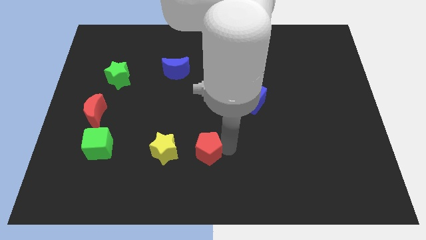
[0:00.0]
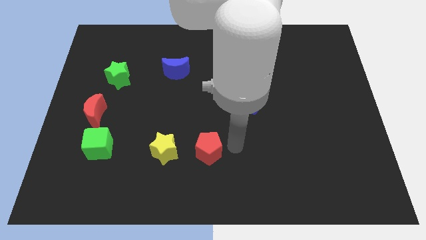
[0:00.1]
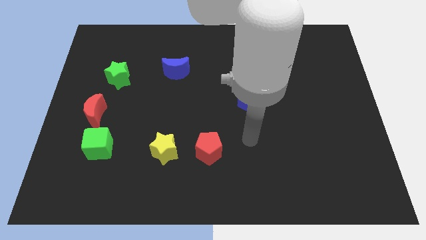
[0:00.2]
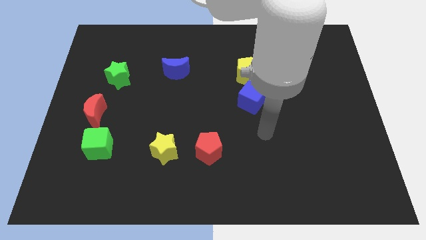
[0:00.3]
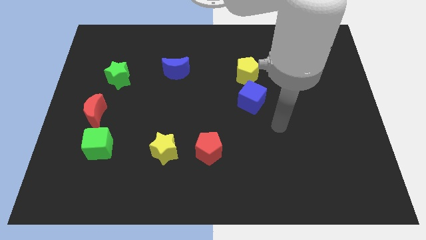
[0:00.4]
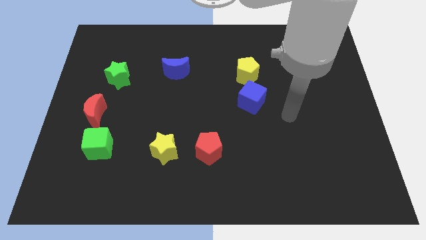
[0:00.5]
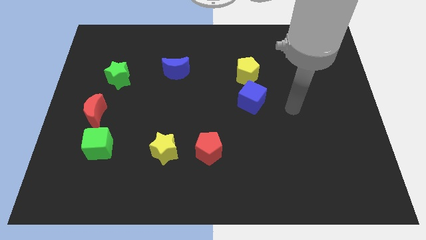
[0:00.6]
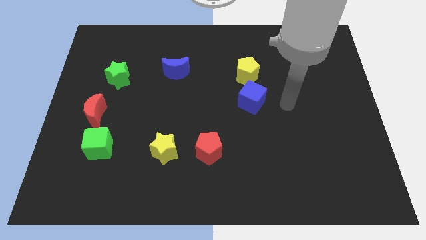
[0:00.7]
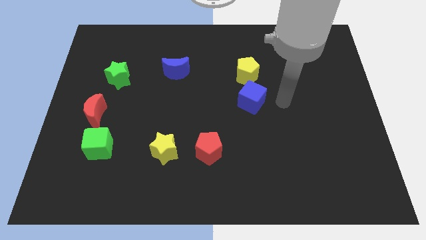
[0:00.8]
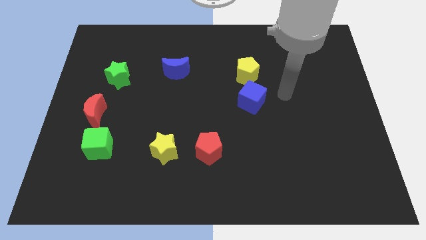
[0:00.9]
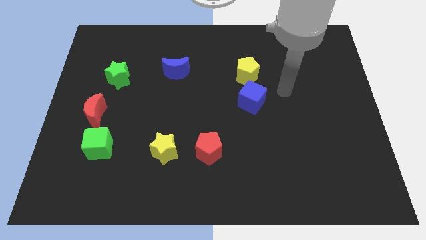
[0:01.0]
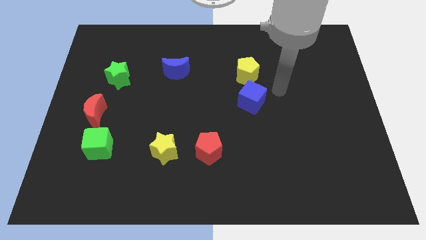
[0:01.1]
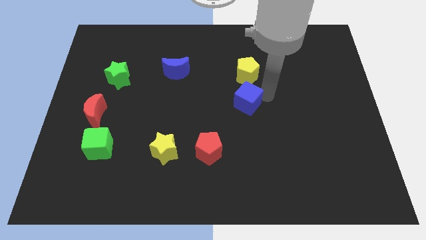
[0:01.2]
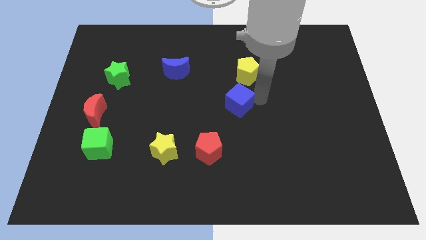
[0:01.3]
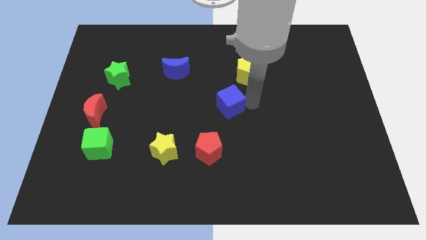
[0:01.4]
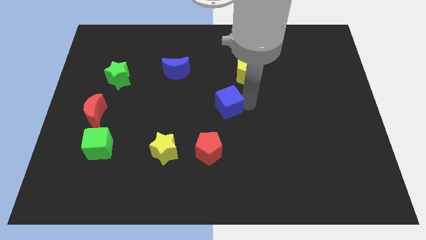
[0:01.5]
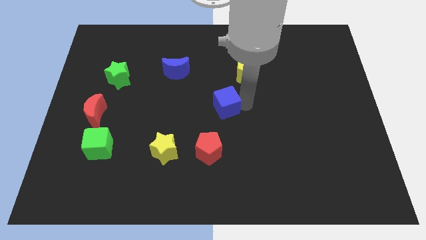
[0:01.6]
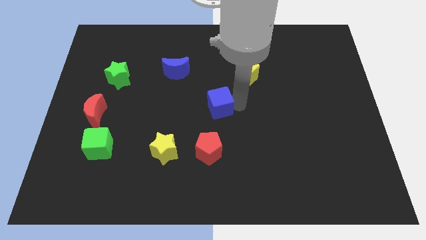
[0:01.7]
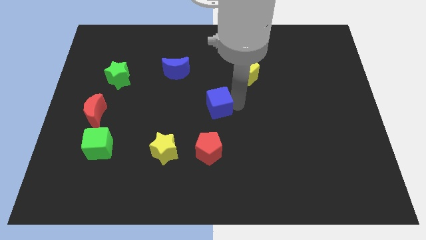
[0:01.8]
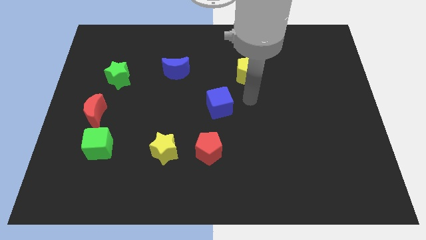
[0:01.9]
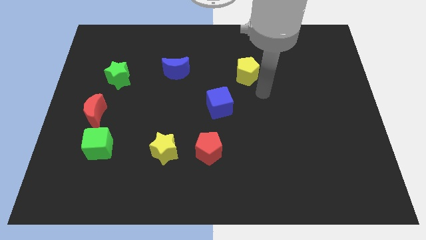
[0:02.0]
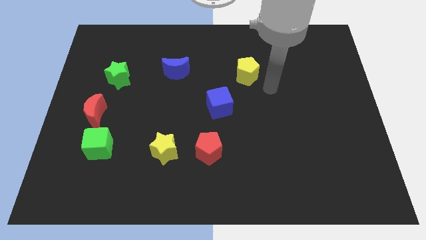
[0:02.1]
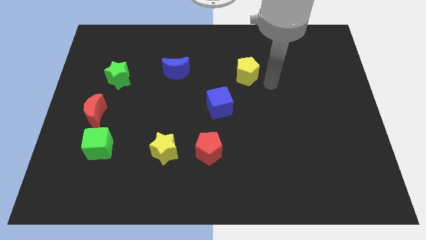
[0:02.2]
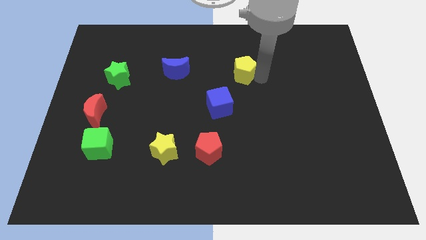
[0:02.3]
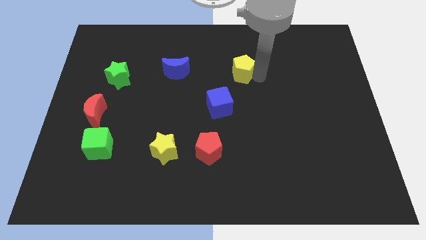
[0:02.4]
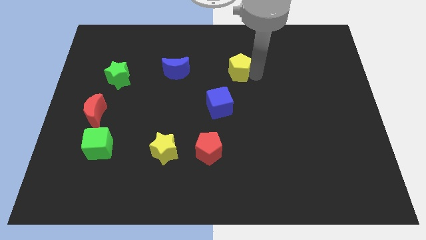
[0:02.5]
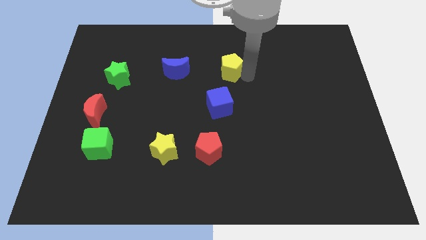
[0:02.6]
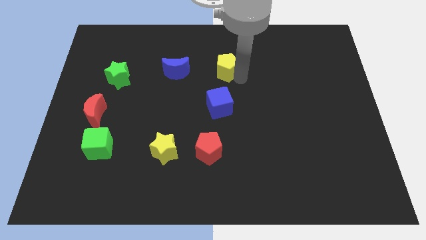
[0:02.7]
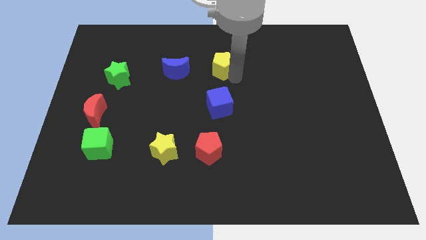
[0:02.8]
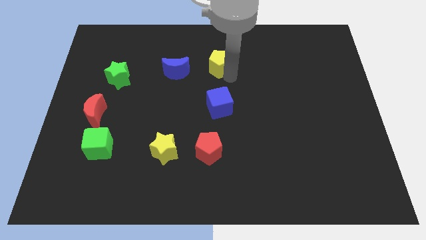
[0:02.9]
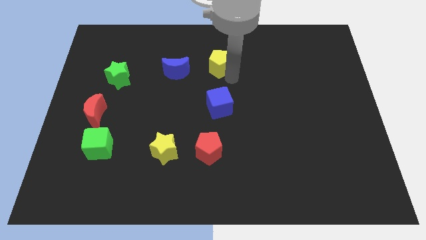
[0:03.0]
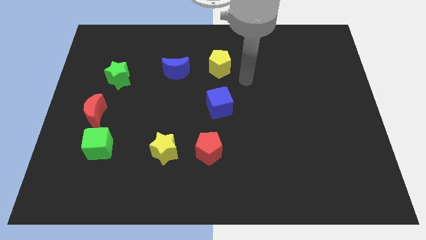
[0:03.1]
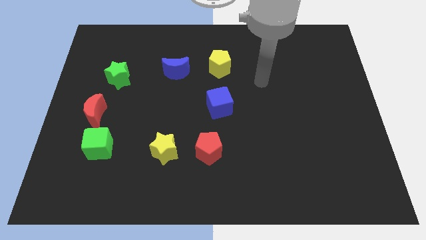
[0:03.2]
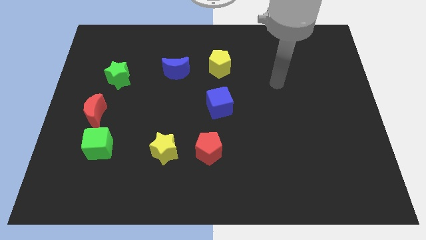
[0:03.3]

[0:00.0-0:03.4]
put the blue cube above the red pentagon

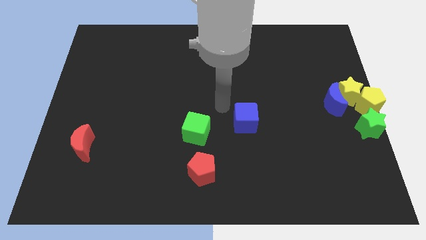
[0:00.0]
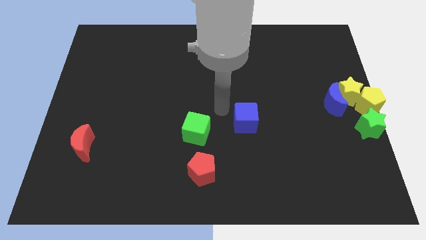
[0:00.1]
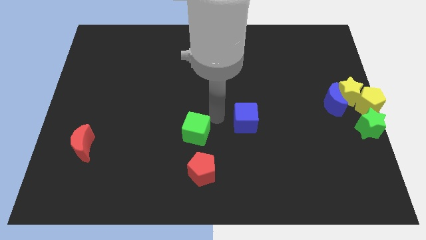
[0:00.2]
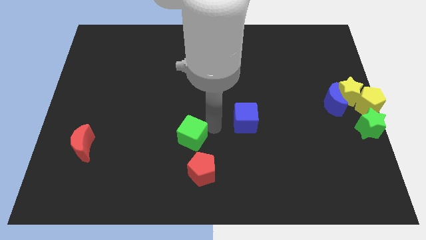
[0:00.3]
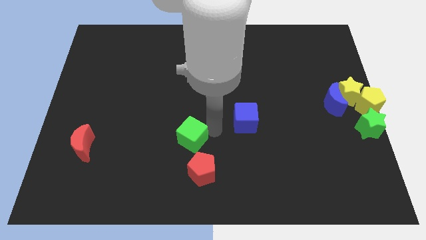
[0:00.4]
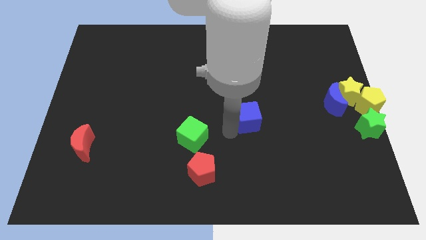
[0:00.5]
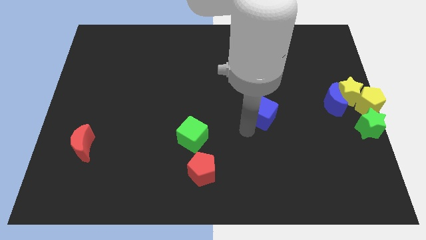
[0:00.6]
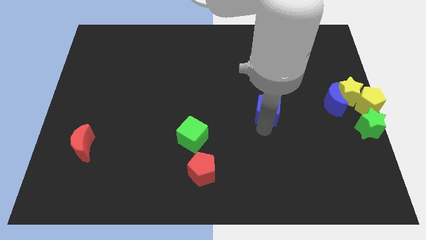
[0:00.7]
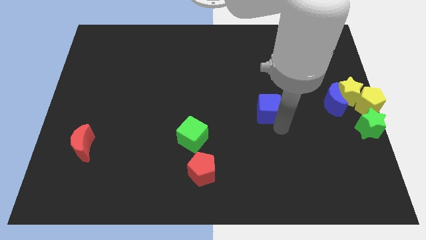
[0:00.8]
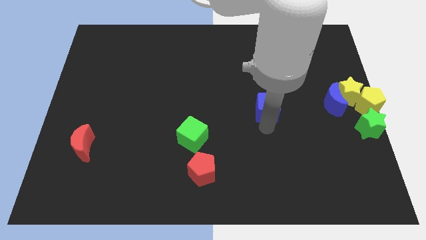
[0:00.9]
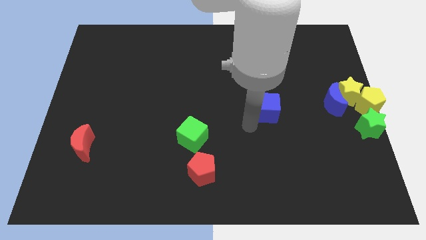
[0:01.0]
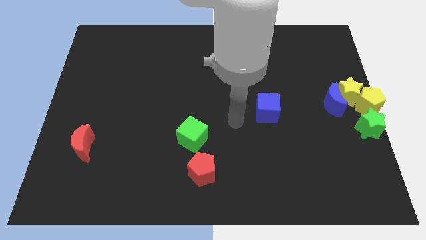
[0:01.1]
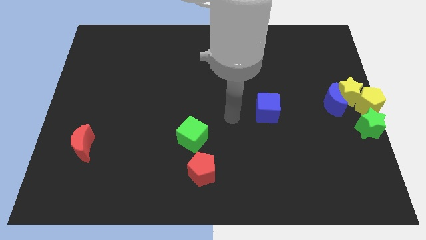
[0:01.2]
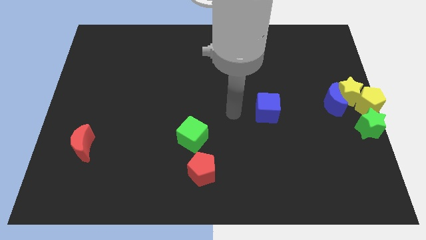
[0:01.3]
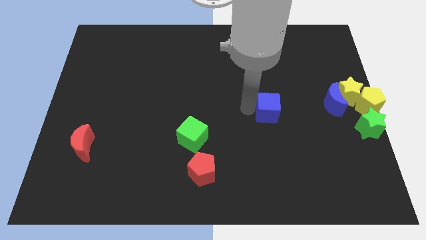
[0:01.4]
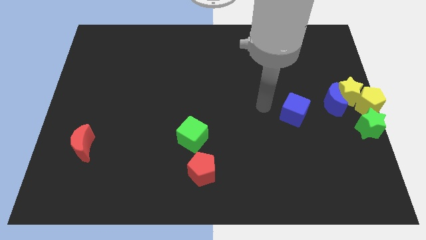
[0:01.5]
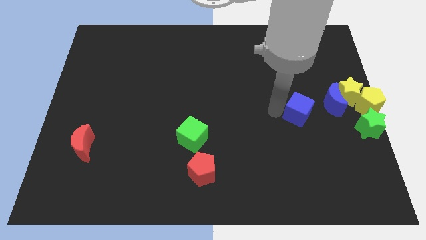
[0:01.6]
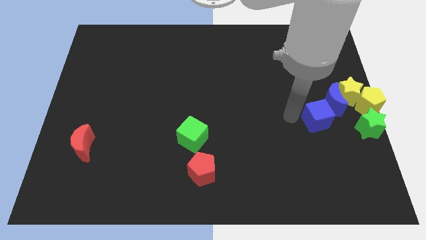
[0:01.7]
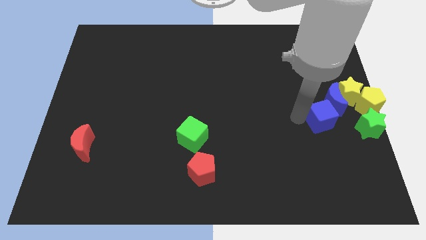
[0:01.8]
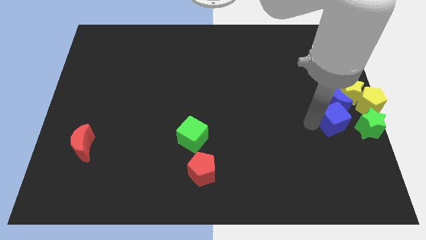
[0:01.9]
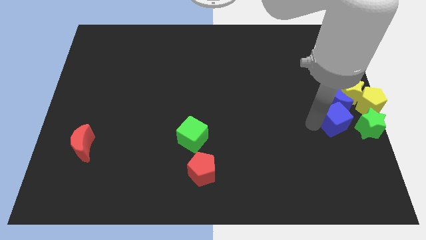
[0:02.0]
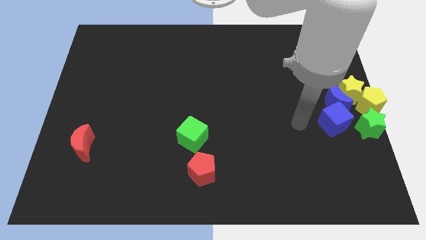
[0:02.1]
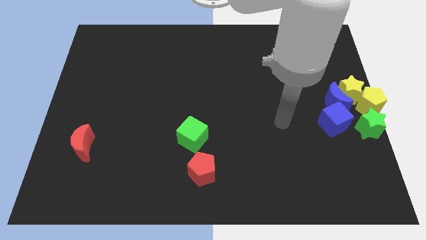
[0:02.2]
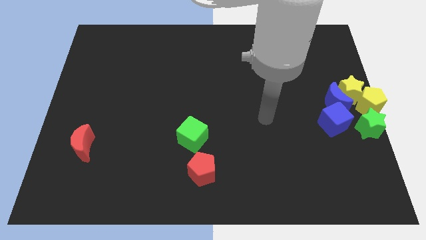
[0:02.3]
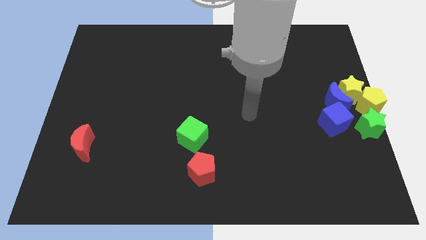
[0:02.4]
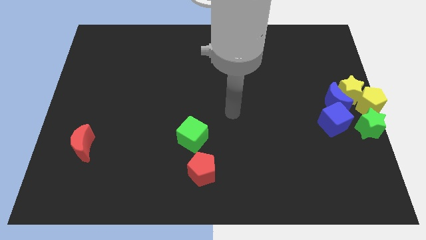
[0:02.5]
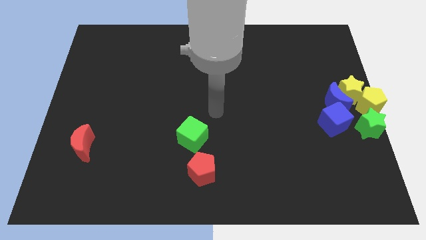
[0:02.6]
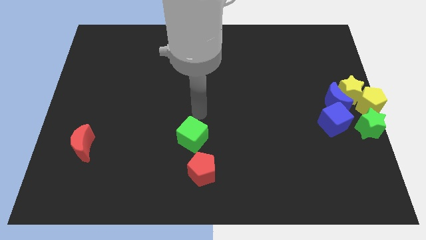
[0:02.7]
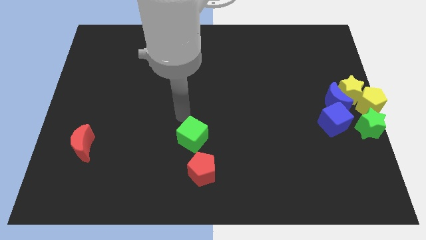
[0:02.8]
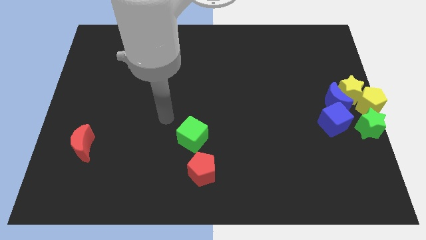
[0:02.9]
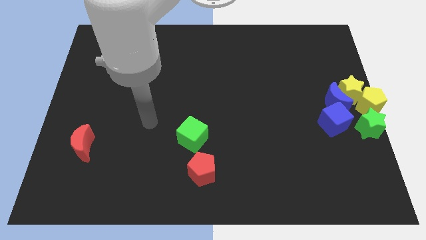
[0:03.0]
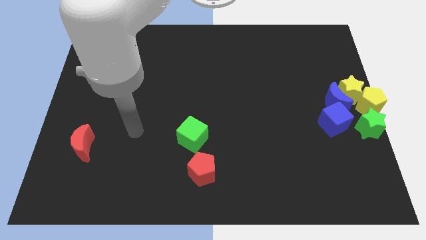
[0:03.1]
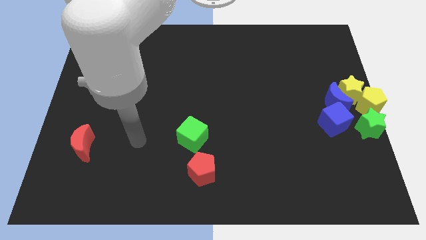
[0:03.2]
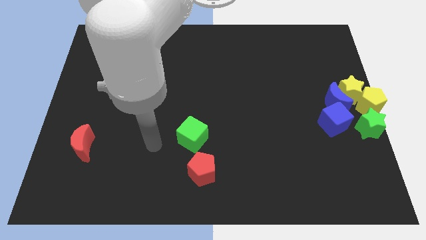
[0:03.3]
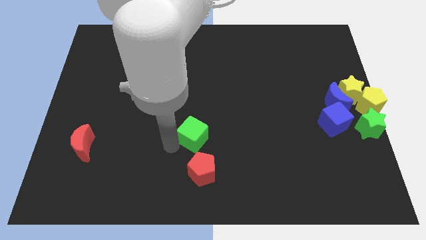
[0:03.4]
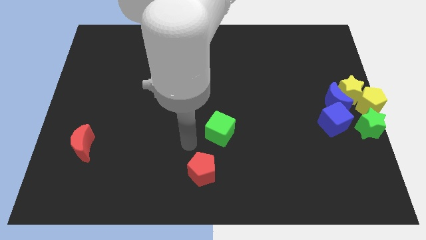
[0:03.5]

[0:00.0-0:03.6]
move the blue cube bottom to the blue crescent

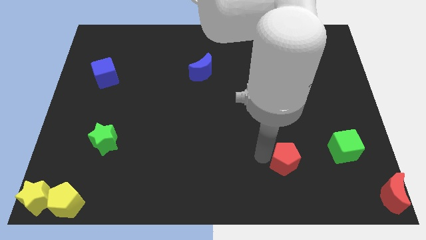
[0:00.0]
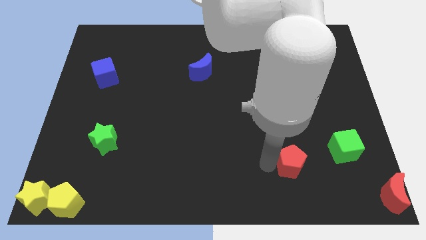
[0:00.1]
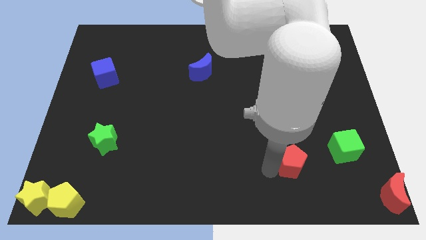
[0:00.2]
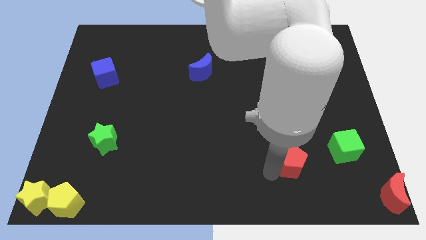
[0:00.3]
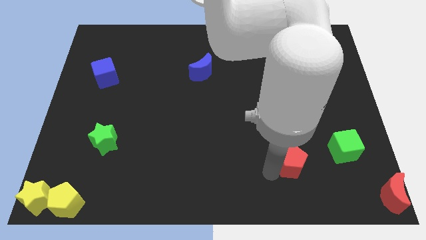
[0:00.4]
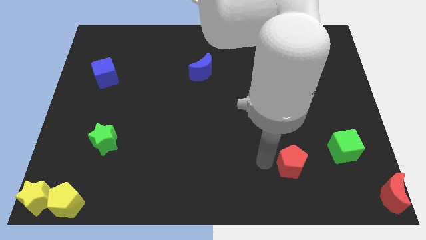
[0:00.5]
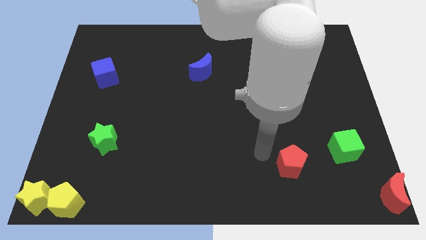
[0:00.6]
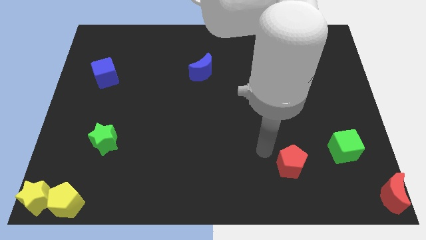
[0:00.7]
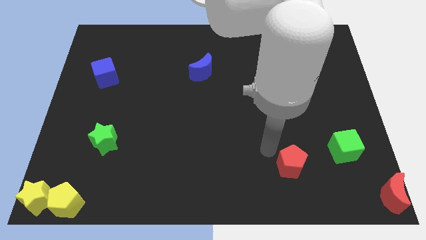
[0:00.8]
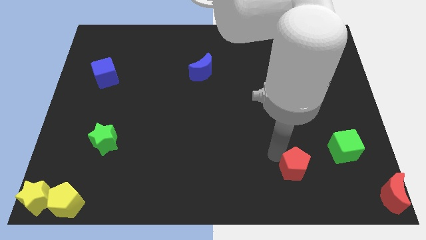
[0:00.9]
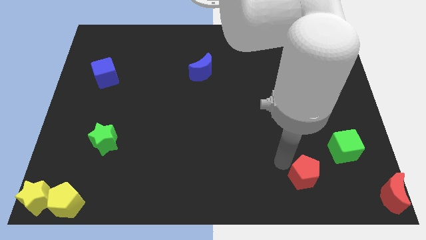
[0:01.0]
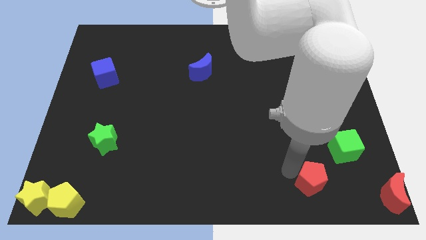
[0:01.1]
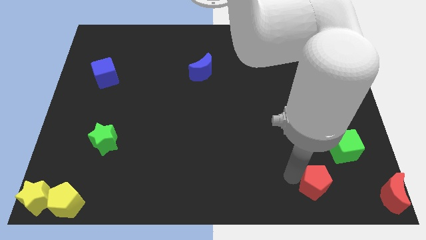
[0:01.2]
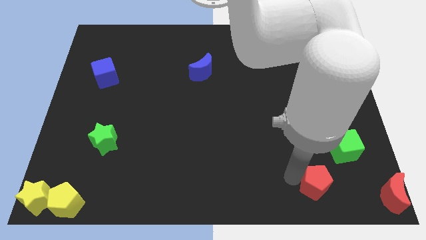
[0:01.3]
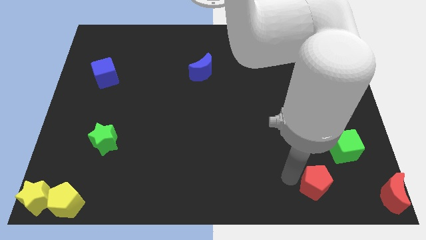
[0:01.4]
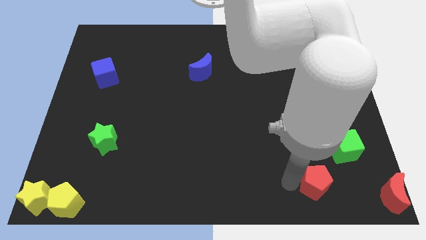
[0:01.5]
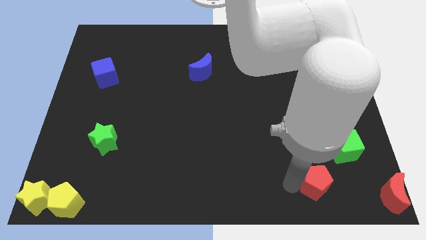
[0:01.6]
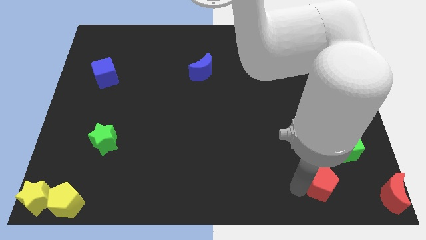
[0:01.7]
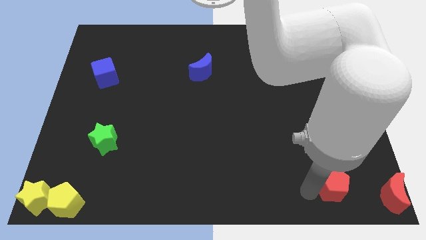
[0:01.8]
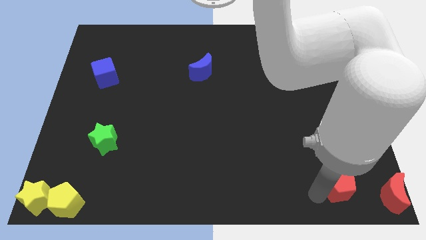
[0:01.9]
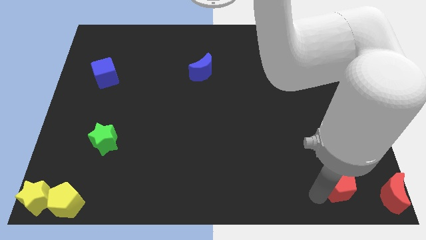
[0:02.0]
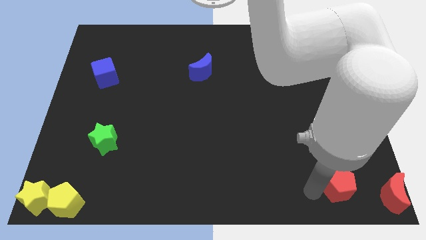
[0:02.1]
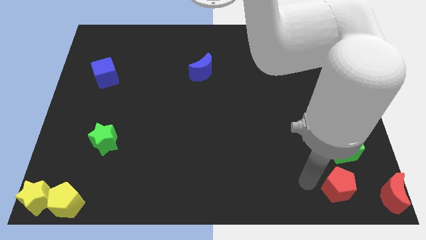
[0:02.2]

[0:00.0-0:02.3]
move the red pentagon to the bottom left side of the green cube
